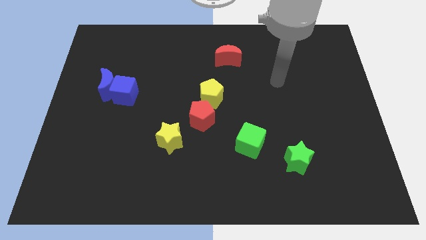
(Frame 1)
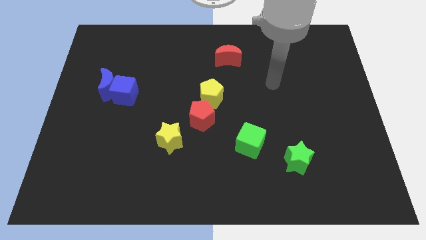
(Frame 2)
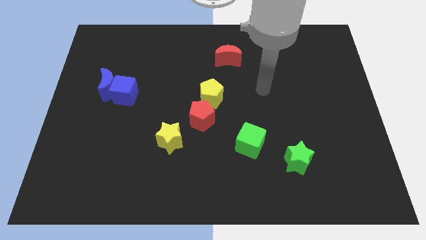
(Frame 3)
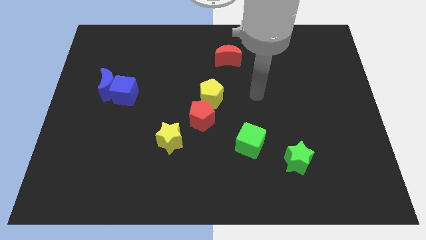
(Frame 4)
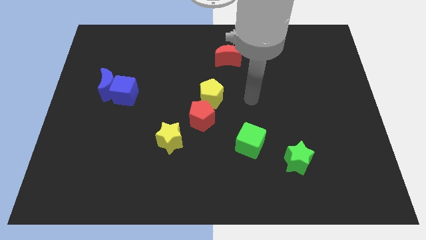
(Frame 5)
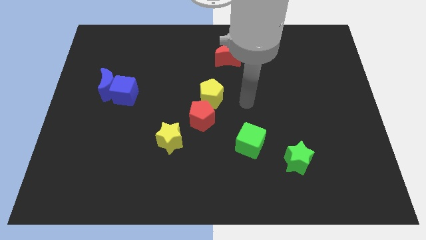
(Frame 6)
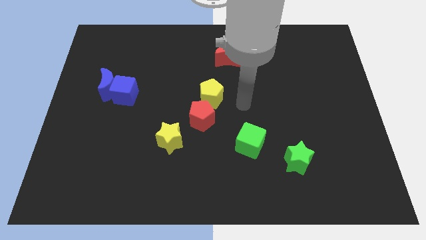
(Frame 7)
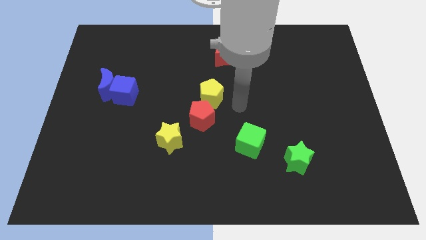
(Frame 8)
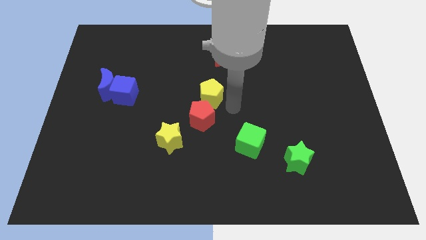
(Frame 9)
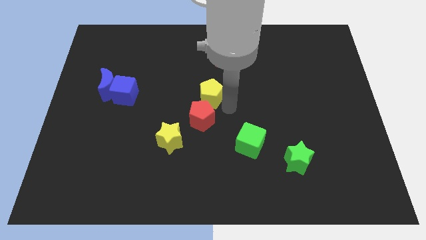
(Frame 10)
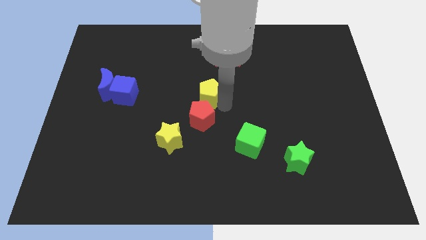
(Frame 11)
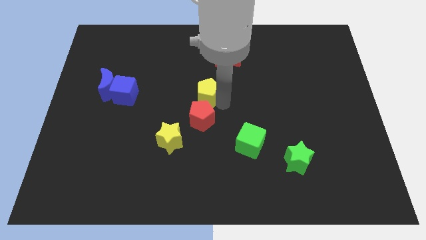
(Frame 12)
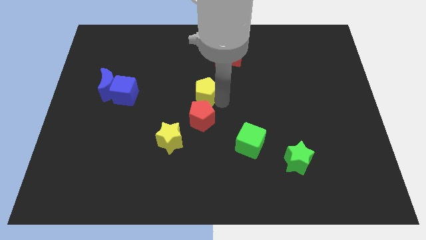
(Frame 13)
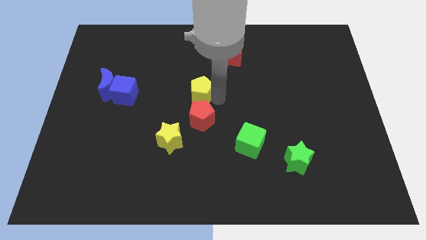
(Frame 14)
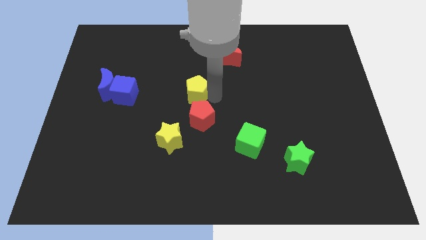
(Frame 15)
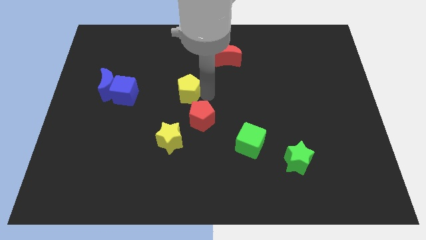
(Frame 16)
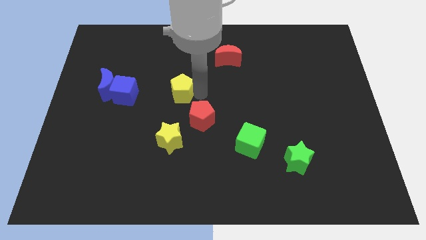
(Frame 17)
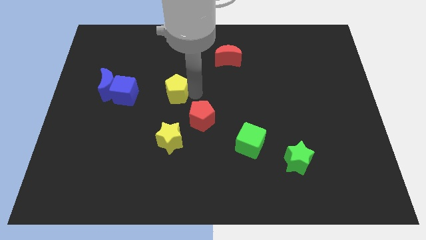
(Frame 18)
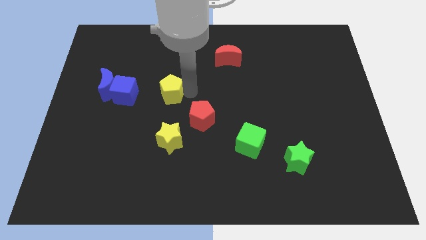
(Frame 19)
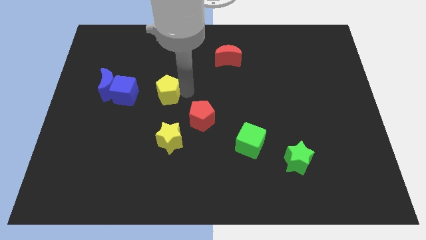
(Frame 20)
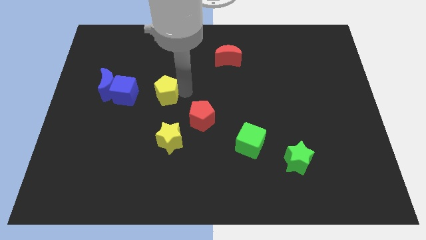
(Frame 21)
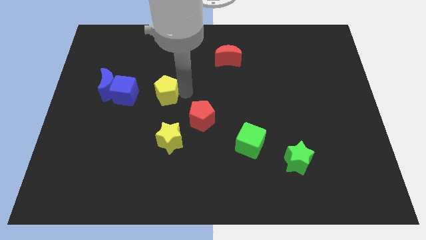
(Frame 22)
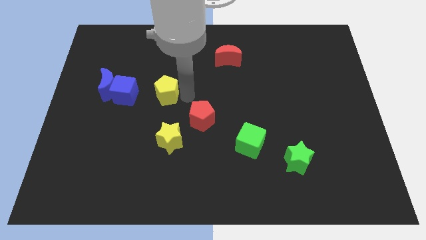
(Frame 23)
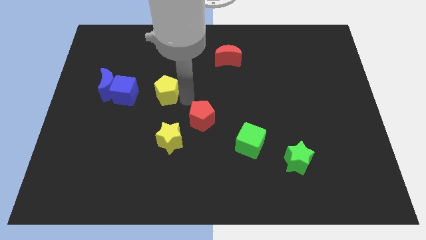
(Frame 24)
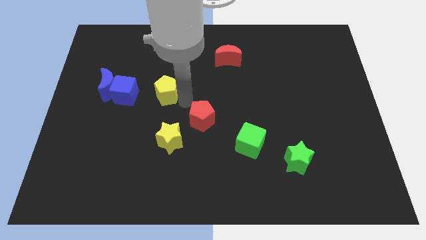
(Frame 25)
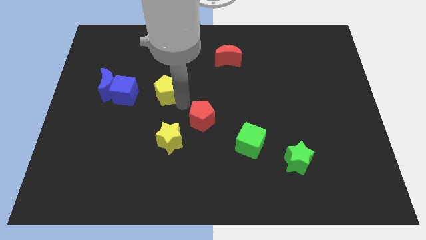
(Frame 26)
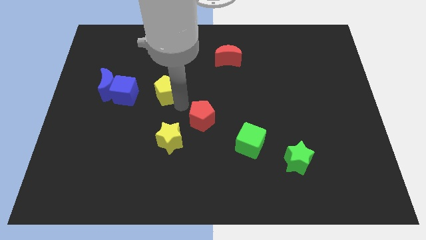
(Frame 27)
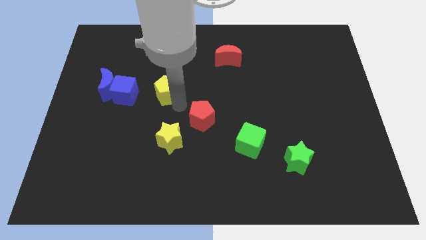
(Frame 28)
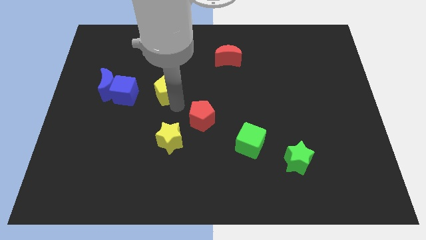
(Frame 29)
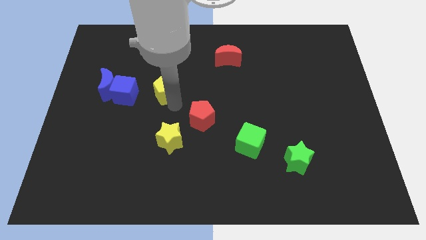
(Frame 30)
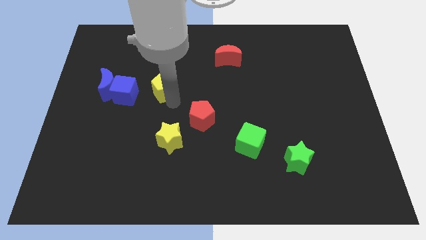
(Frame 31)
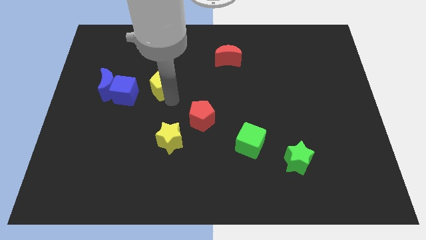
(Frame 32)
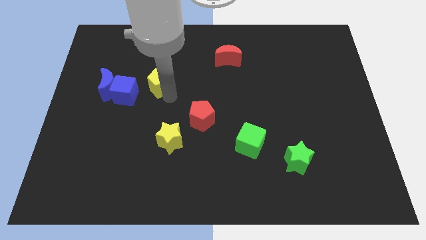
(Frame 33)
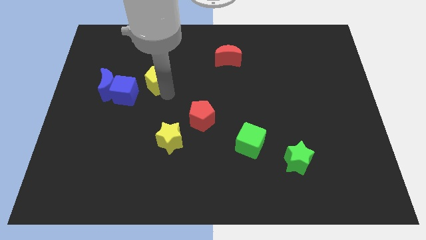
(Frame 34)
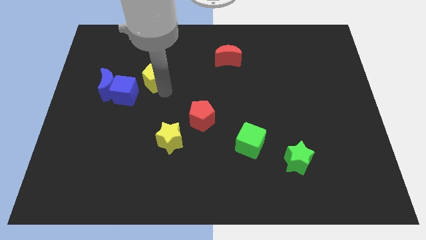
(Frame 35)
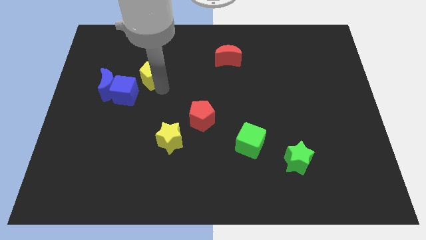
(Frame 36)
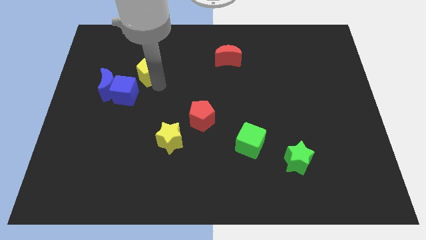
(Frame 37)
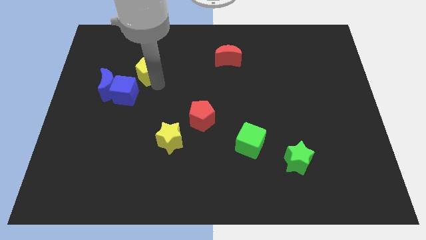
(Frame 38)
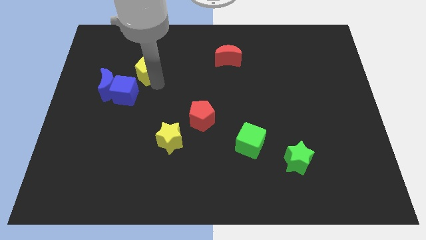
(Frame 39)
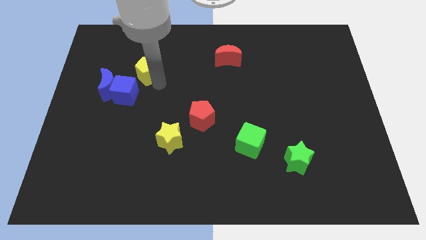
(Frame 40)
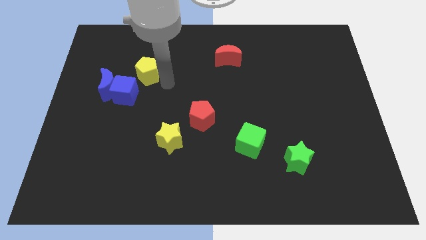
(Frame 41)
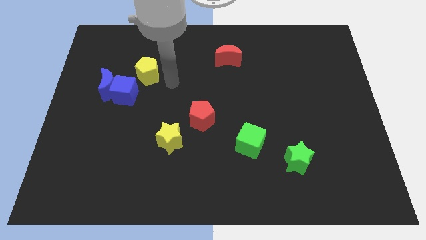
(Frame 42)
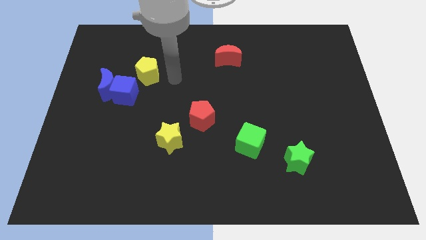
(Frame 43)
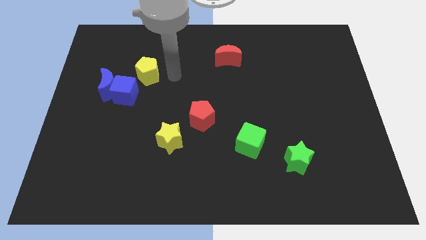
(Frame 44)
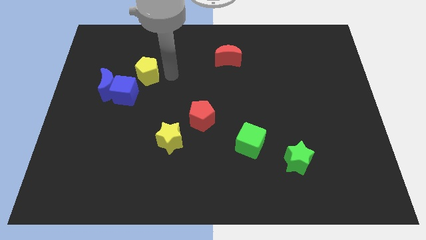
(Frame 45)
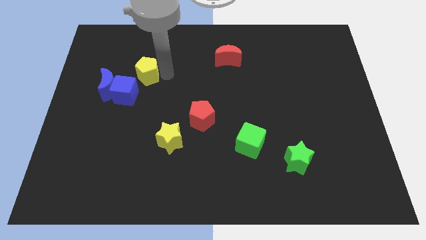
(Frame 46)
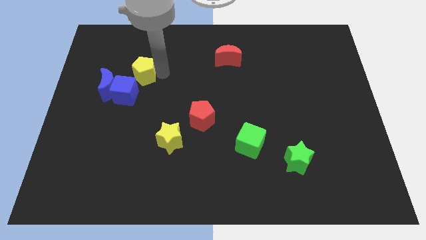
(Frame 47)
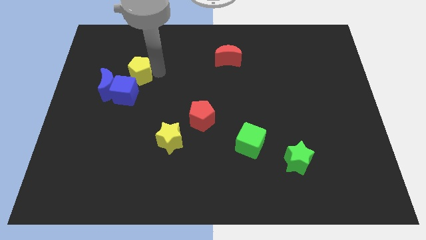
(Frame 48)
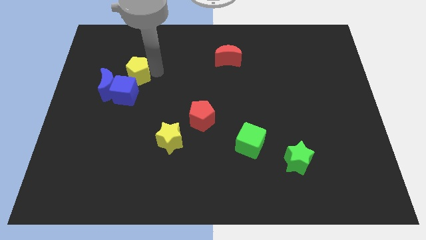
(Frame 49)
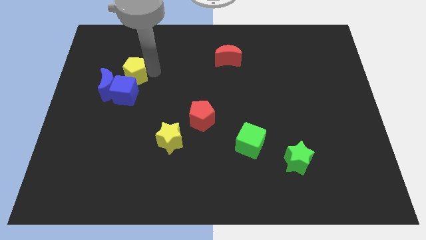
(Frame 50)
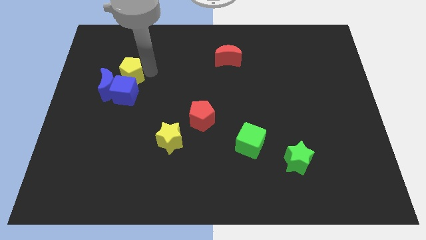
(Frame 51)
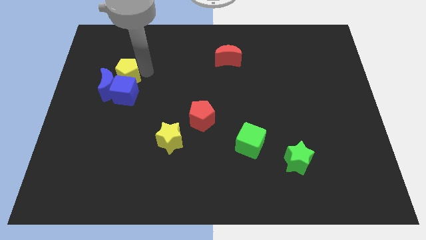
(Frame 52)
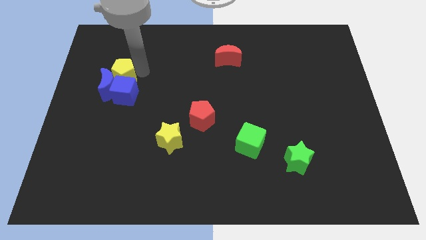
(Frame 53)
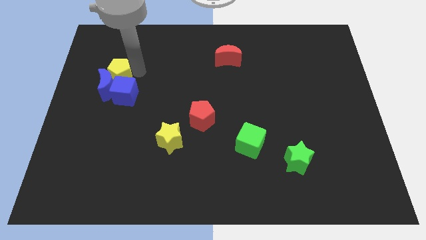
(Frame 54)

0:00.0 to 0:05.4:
put the yellow pentagon to the blue moon

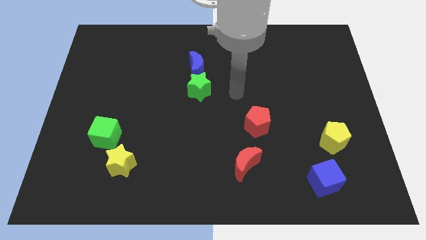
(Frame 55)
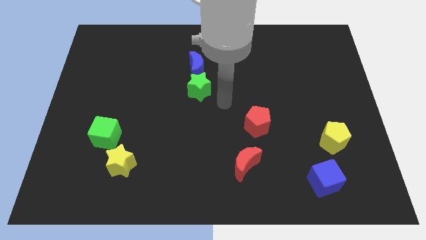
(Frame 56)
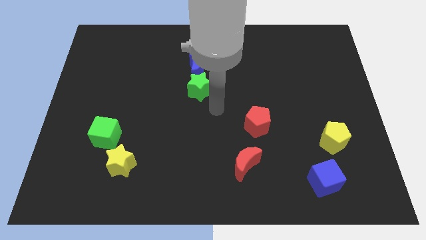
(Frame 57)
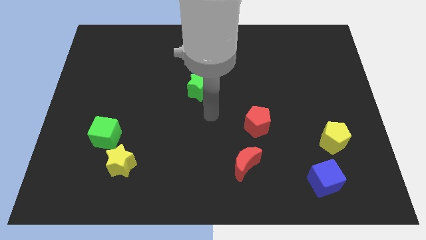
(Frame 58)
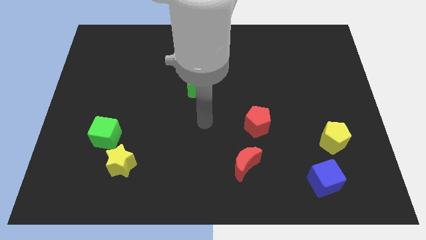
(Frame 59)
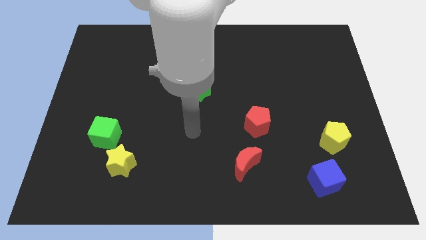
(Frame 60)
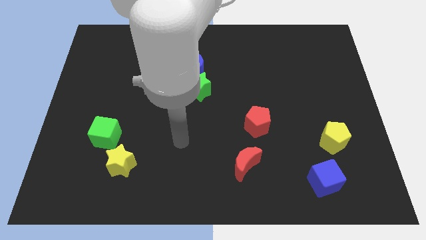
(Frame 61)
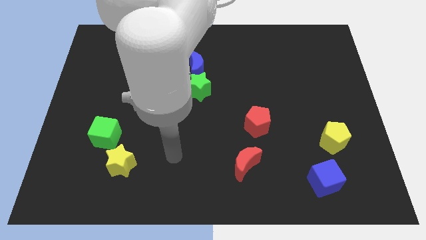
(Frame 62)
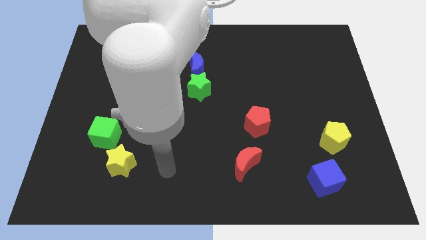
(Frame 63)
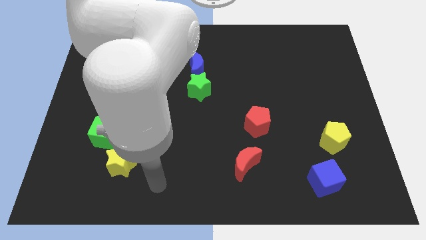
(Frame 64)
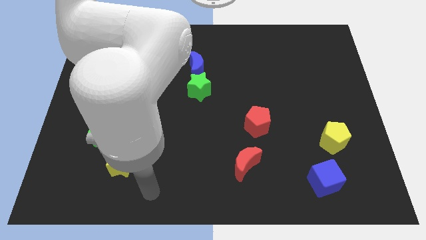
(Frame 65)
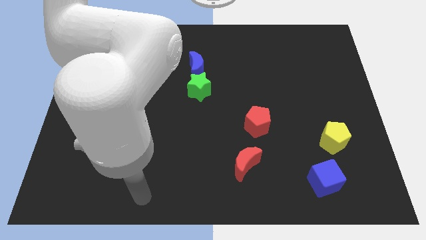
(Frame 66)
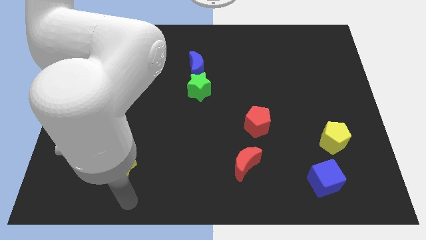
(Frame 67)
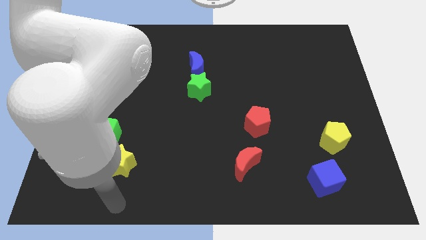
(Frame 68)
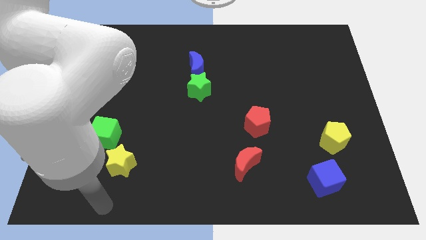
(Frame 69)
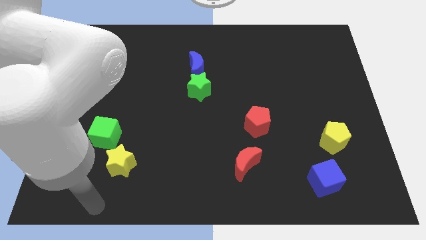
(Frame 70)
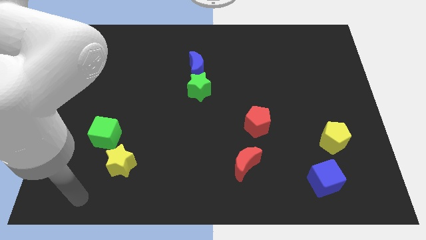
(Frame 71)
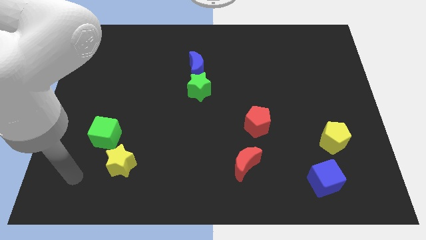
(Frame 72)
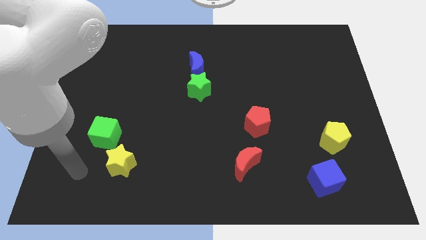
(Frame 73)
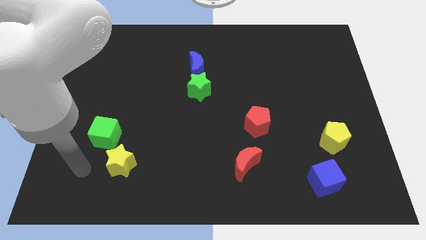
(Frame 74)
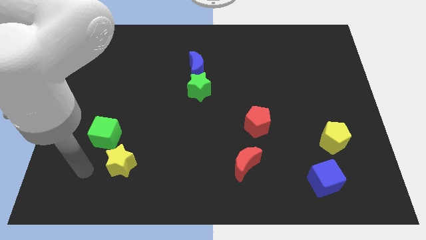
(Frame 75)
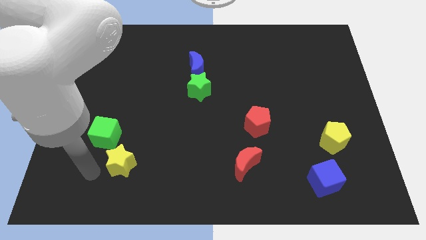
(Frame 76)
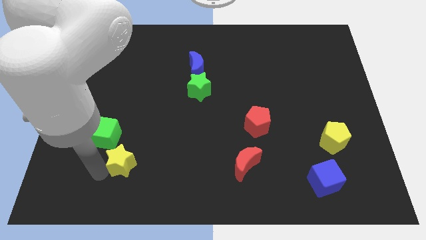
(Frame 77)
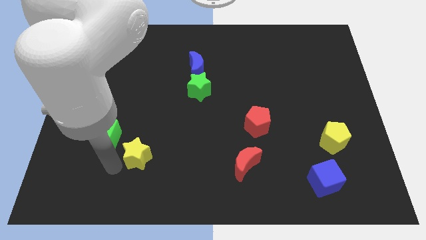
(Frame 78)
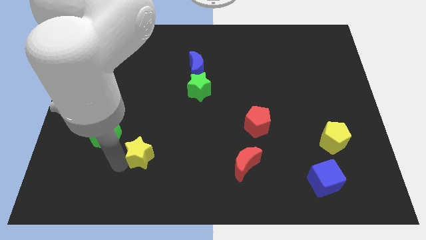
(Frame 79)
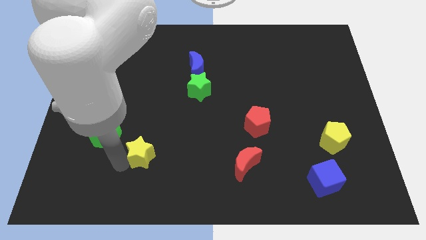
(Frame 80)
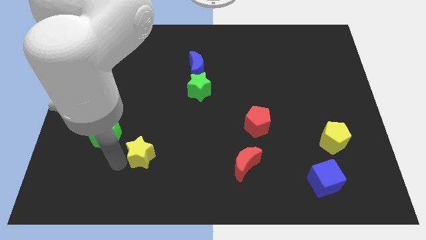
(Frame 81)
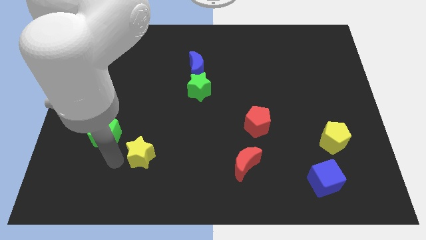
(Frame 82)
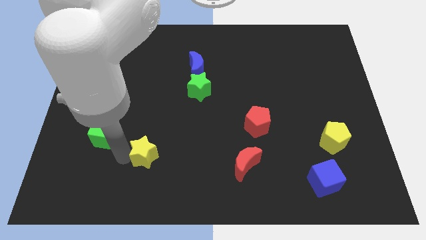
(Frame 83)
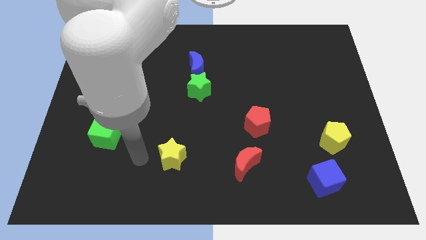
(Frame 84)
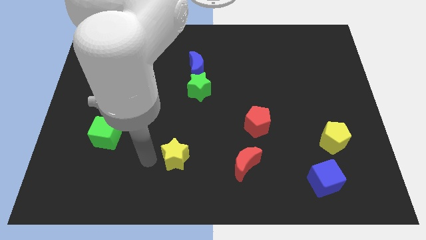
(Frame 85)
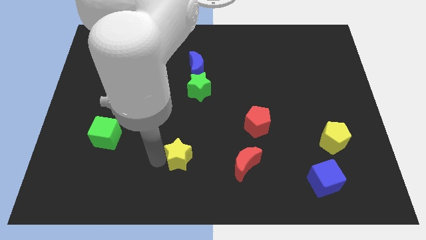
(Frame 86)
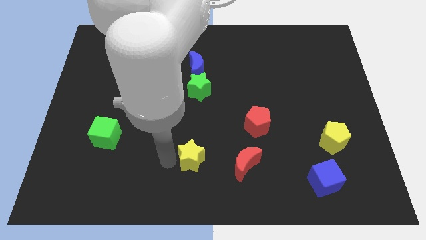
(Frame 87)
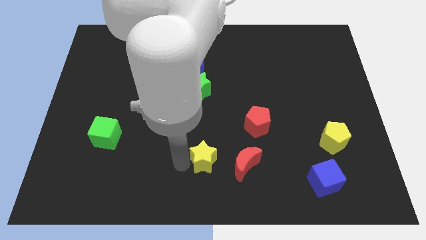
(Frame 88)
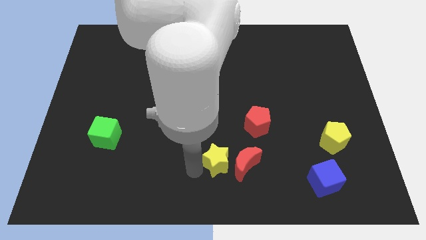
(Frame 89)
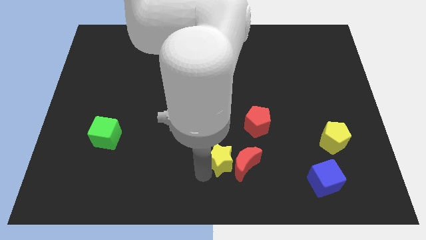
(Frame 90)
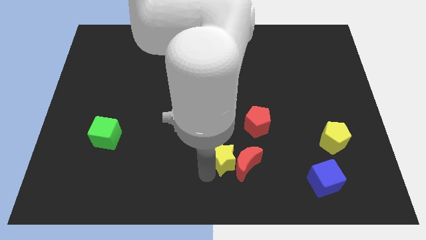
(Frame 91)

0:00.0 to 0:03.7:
move the yellow star to the red moon
